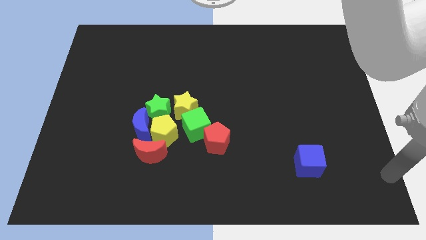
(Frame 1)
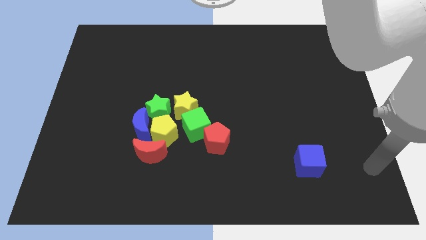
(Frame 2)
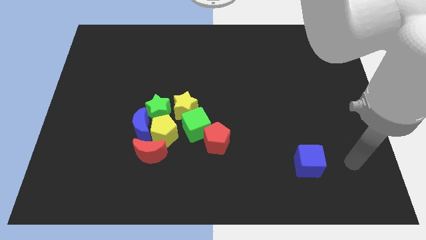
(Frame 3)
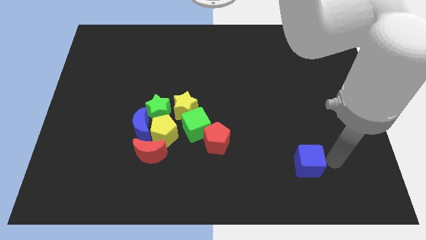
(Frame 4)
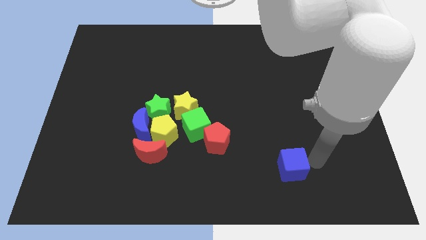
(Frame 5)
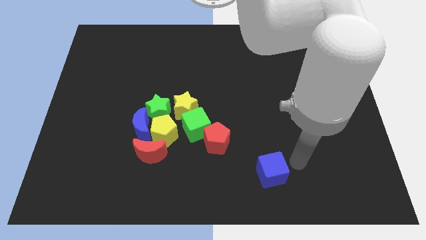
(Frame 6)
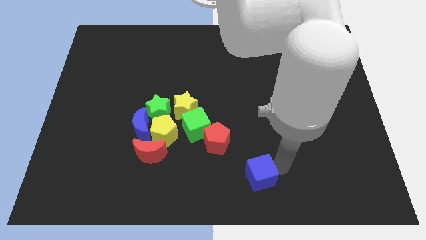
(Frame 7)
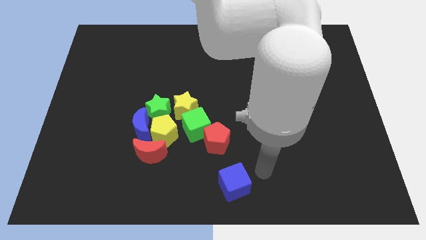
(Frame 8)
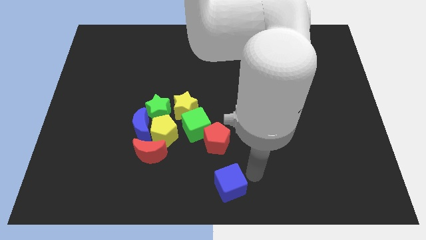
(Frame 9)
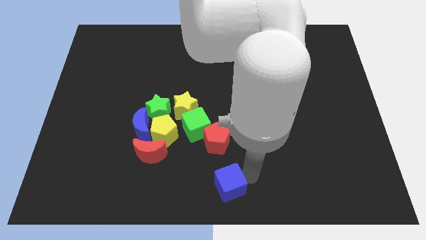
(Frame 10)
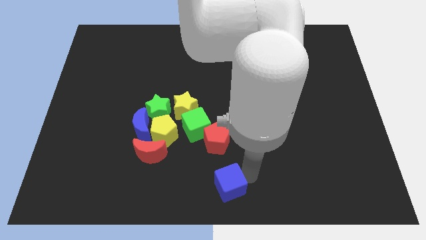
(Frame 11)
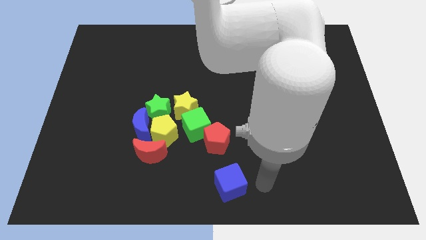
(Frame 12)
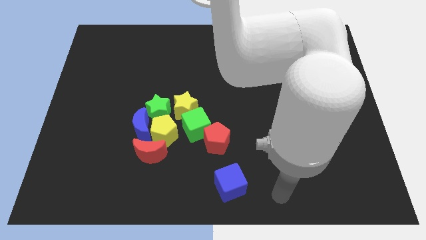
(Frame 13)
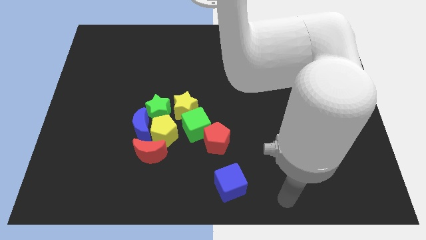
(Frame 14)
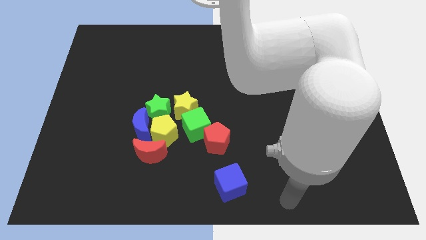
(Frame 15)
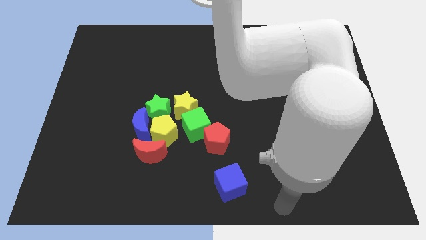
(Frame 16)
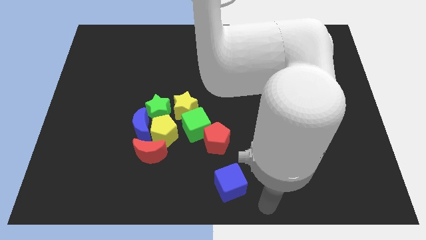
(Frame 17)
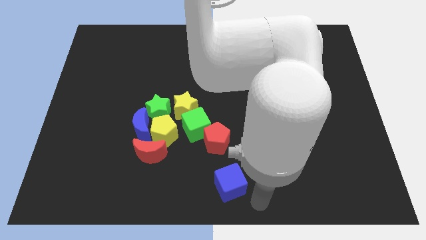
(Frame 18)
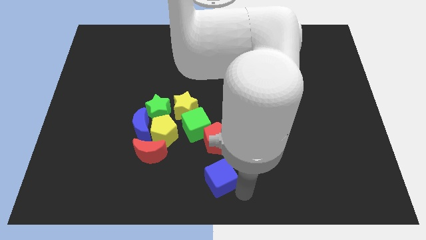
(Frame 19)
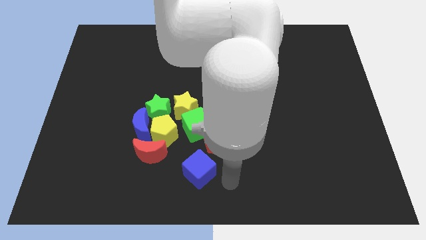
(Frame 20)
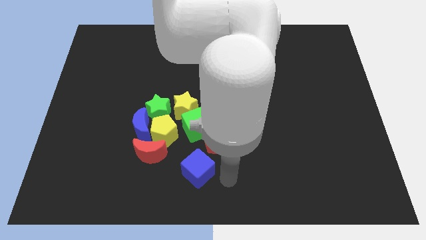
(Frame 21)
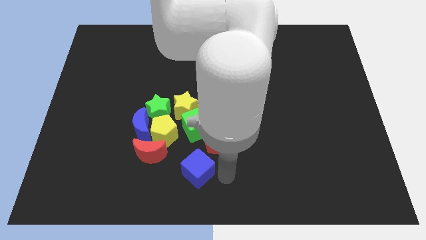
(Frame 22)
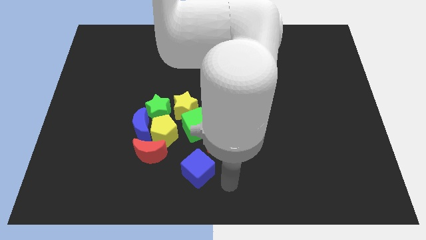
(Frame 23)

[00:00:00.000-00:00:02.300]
push the blue cube below the green cube

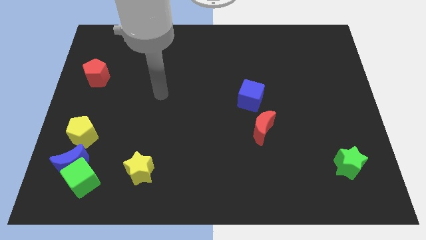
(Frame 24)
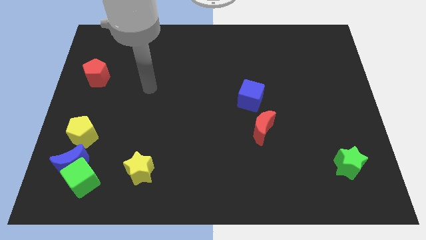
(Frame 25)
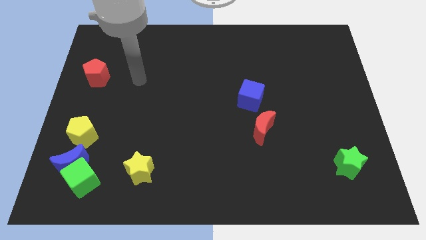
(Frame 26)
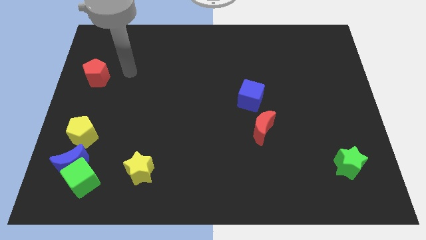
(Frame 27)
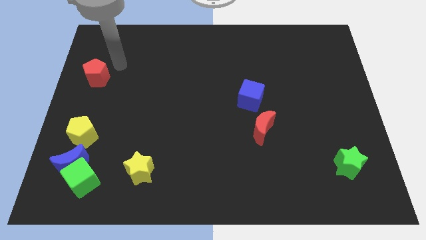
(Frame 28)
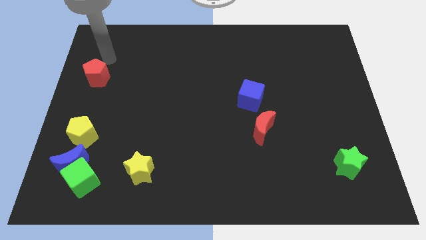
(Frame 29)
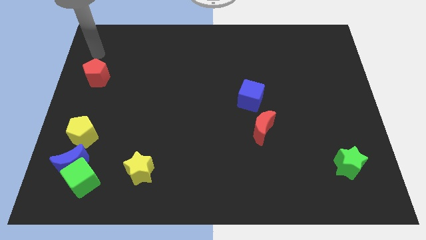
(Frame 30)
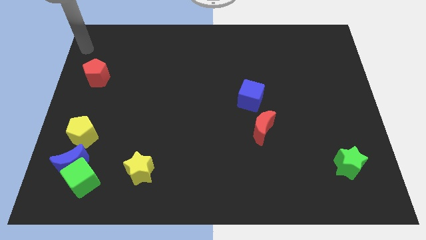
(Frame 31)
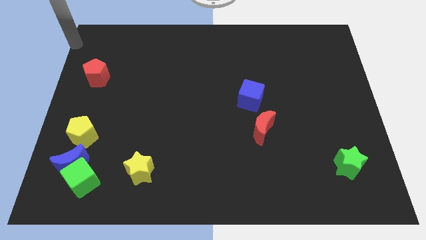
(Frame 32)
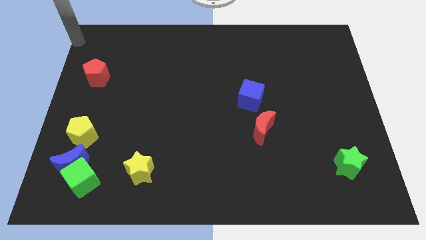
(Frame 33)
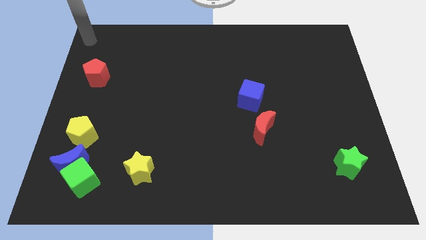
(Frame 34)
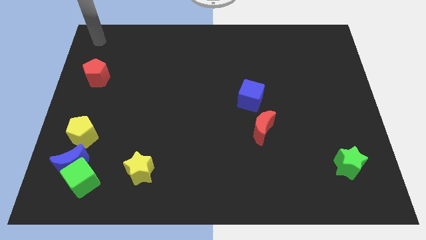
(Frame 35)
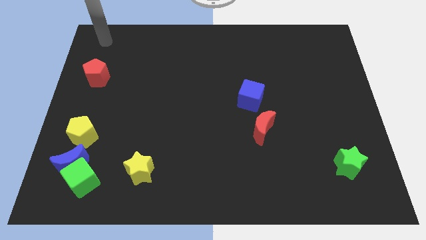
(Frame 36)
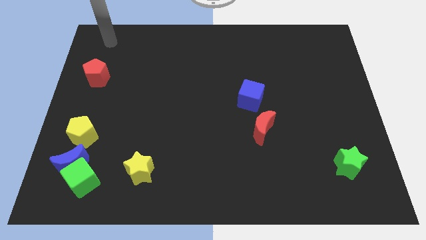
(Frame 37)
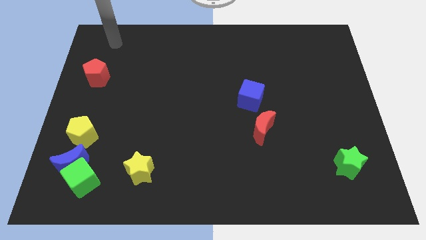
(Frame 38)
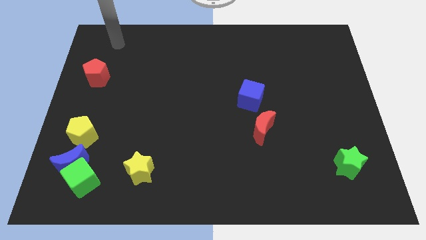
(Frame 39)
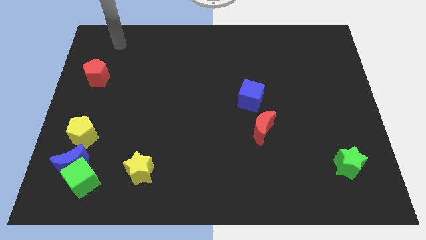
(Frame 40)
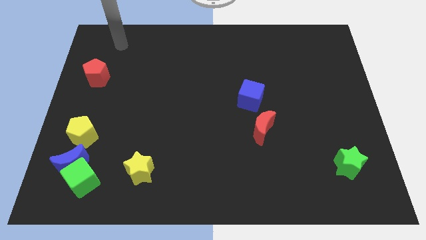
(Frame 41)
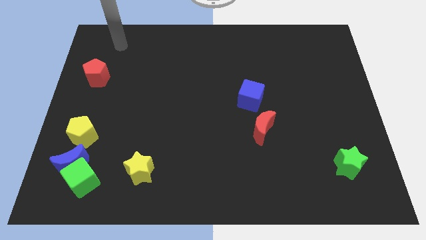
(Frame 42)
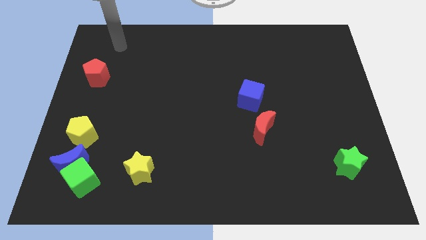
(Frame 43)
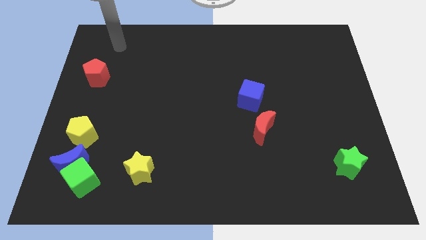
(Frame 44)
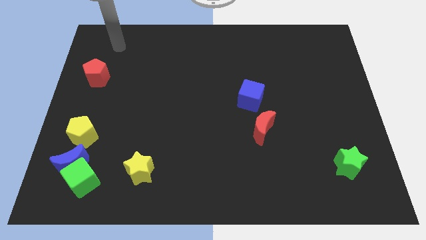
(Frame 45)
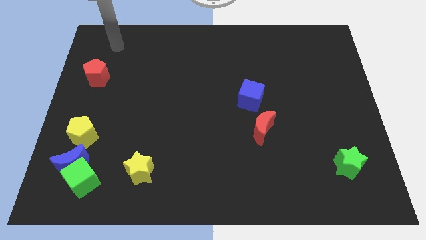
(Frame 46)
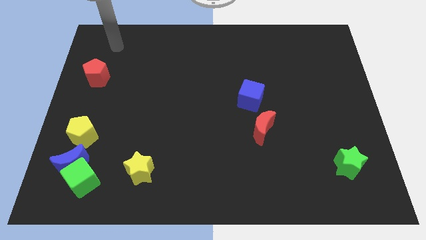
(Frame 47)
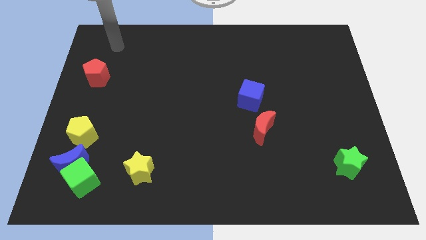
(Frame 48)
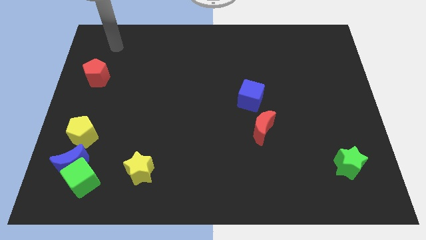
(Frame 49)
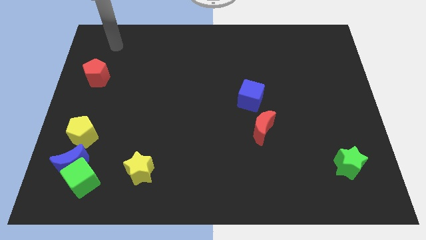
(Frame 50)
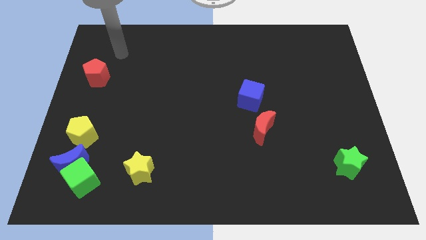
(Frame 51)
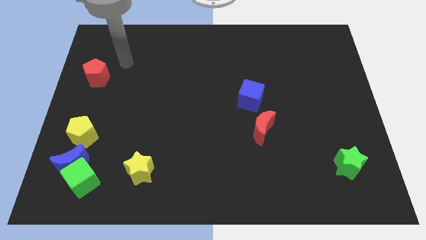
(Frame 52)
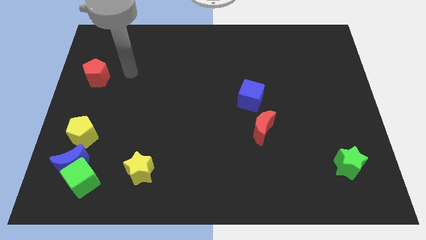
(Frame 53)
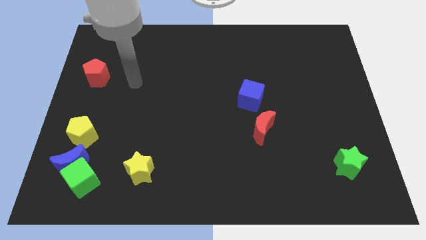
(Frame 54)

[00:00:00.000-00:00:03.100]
move your hand to the right side of the red pentagon

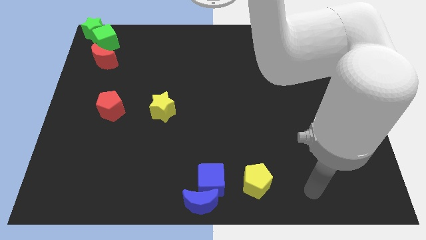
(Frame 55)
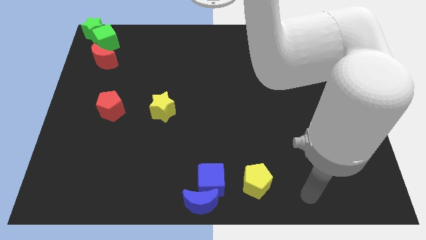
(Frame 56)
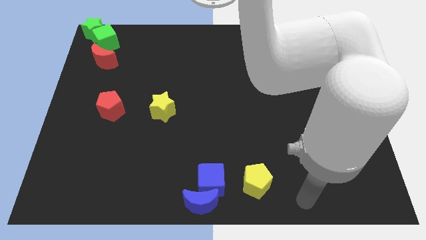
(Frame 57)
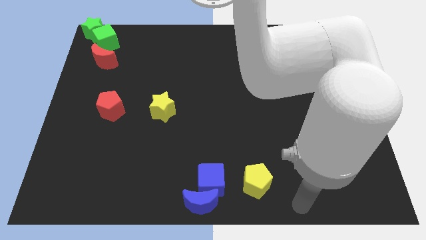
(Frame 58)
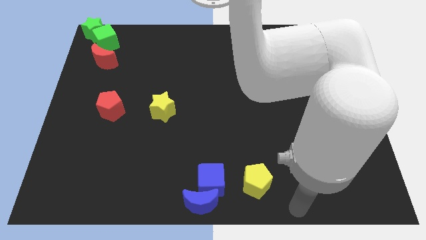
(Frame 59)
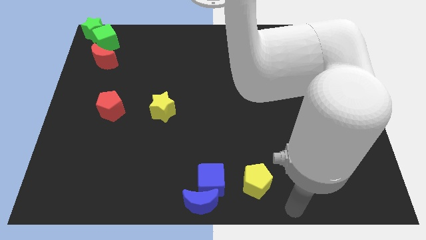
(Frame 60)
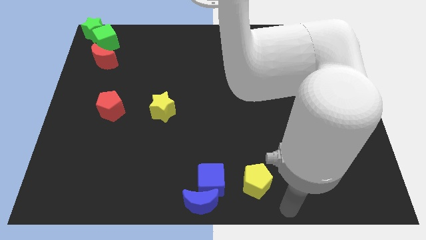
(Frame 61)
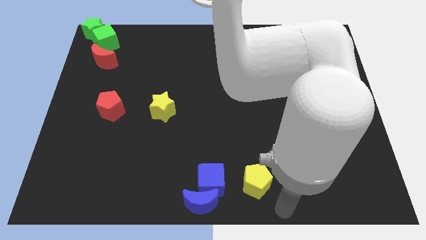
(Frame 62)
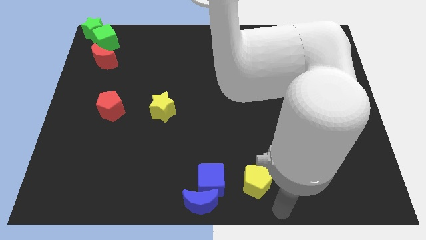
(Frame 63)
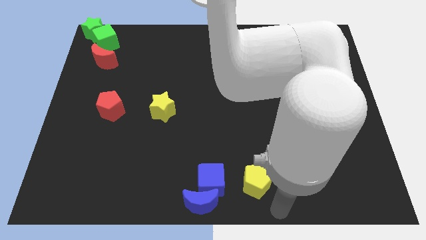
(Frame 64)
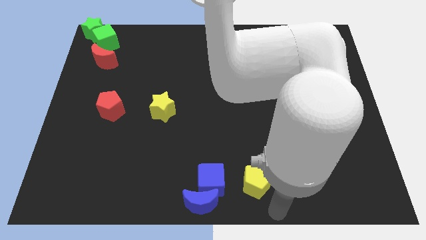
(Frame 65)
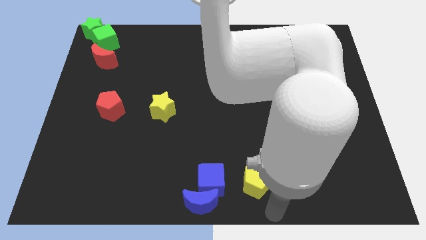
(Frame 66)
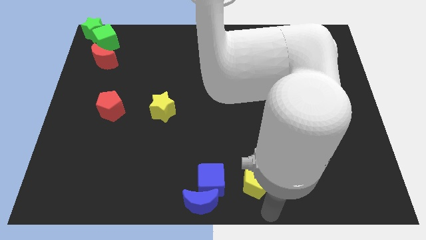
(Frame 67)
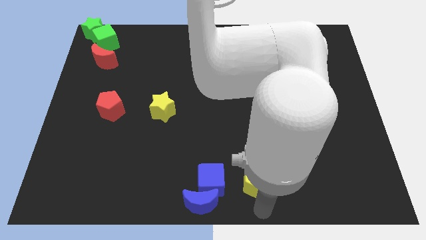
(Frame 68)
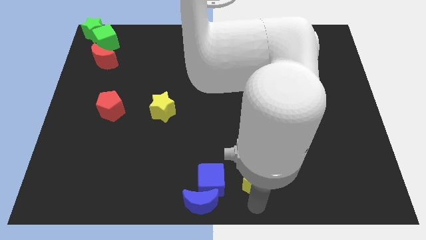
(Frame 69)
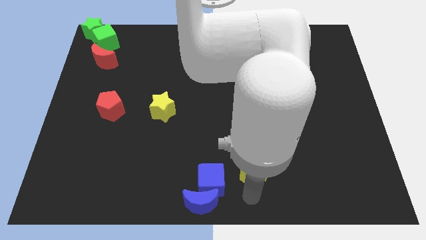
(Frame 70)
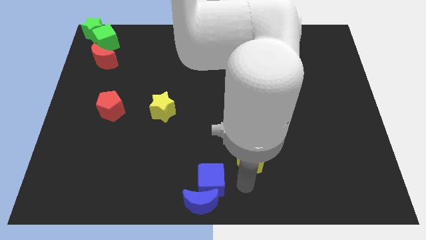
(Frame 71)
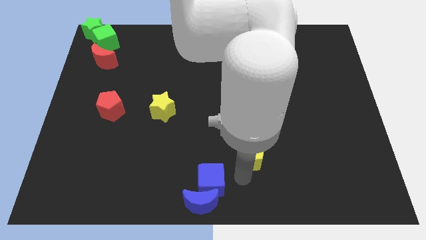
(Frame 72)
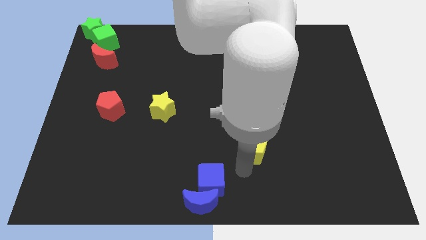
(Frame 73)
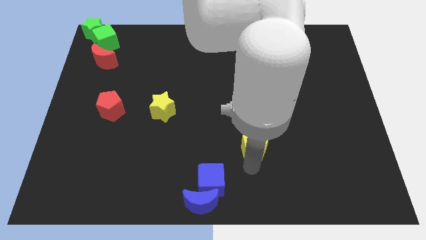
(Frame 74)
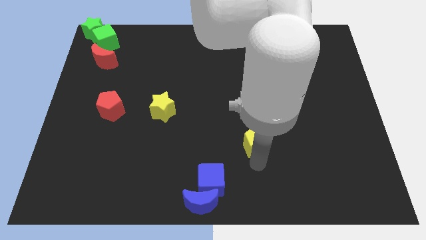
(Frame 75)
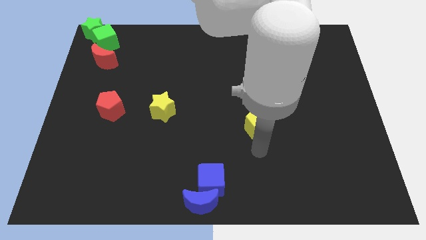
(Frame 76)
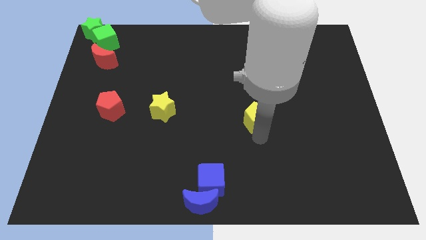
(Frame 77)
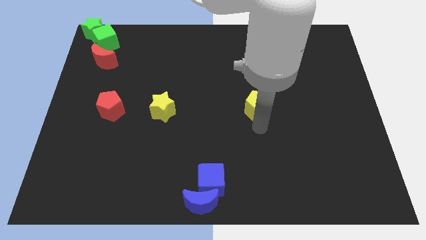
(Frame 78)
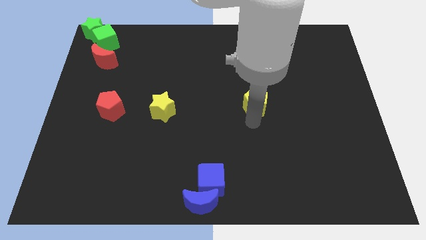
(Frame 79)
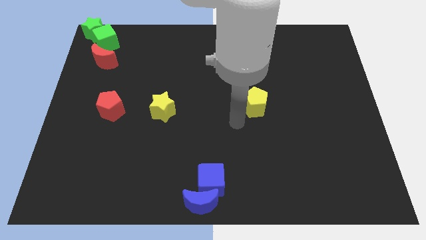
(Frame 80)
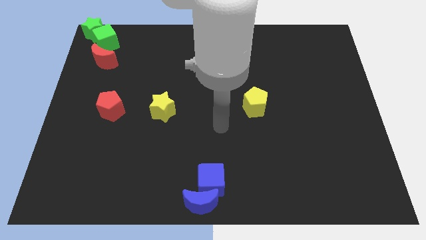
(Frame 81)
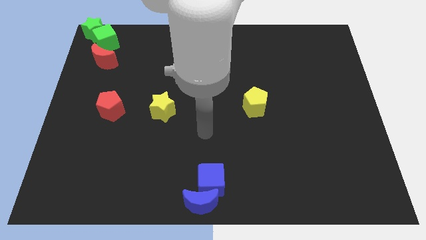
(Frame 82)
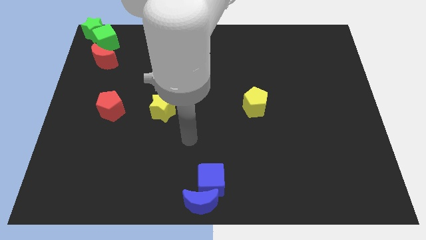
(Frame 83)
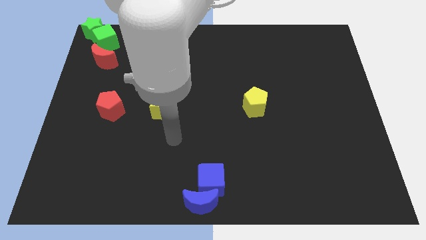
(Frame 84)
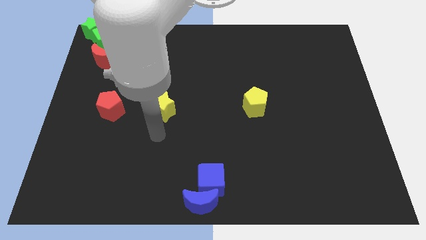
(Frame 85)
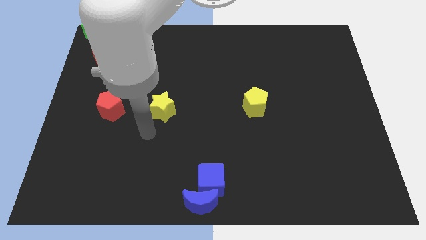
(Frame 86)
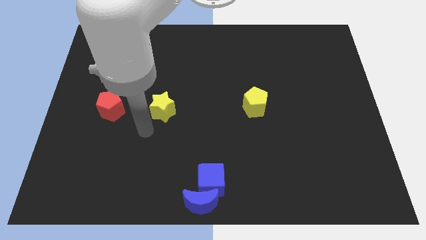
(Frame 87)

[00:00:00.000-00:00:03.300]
place the yellow pentagon to the right of the yellow star

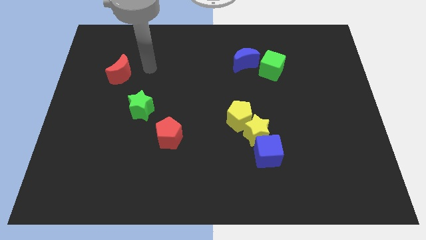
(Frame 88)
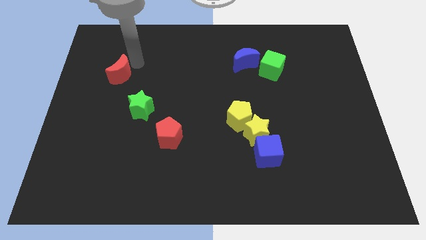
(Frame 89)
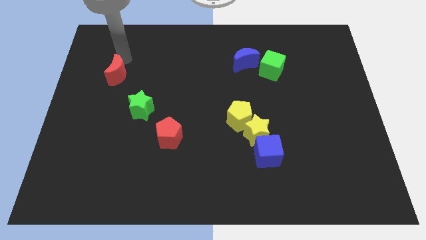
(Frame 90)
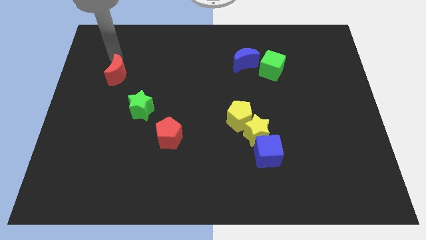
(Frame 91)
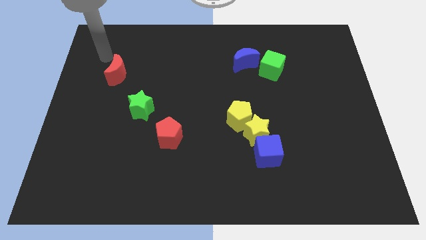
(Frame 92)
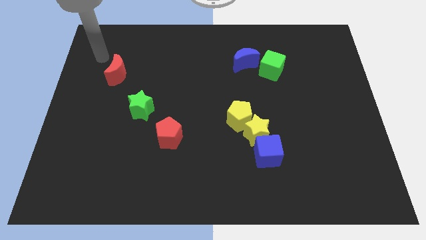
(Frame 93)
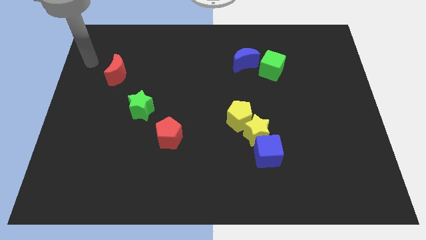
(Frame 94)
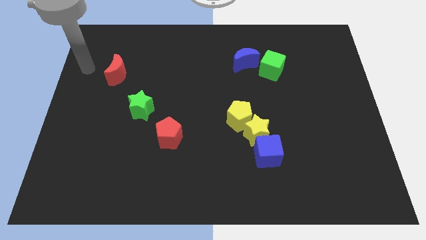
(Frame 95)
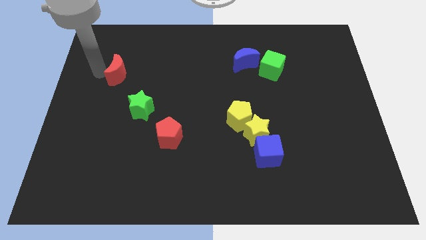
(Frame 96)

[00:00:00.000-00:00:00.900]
go near the red moon
